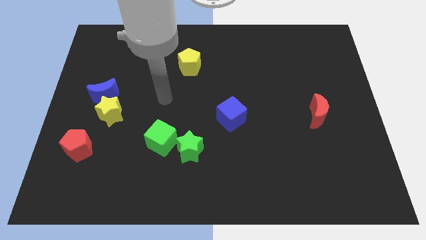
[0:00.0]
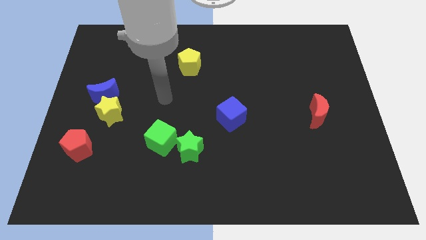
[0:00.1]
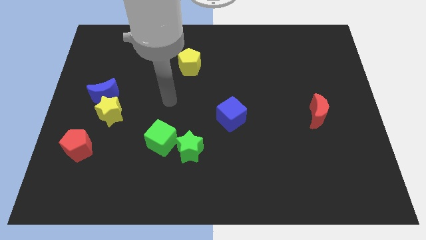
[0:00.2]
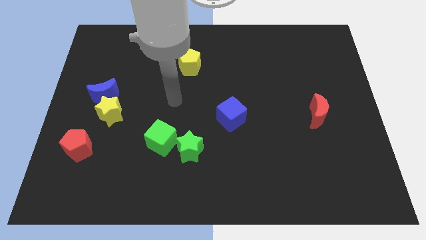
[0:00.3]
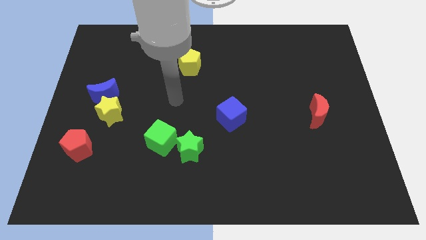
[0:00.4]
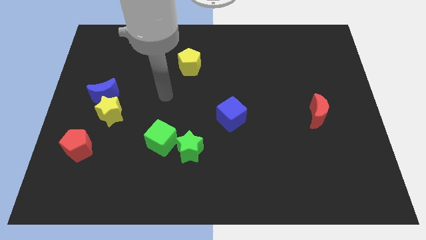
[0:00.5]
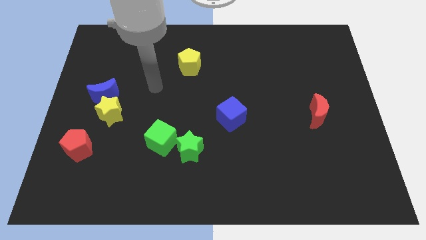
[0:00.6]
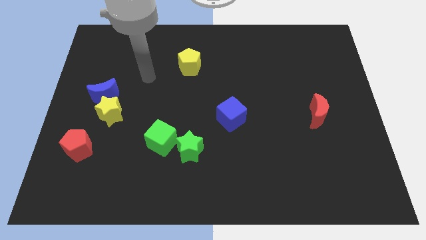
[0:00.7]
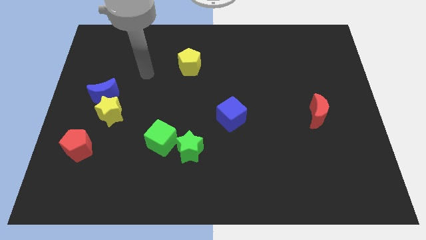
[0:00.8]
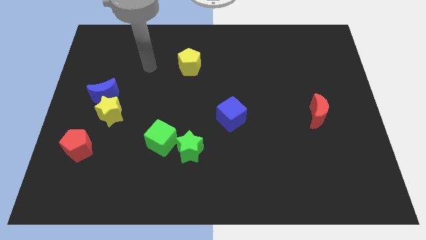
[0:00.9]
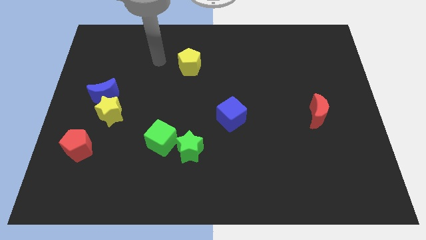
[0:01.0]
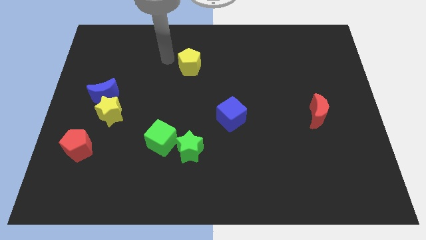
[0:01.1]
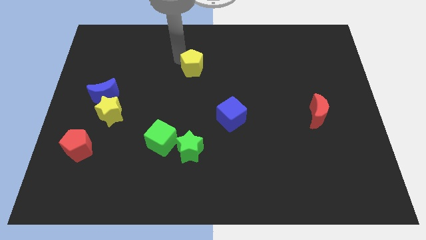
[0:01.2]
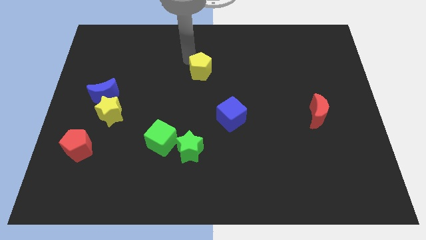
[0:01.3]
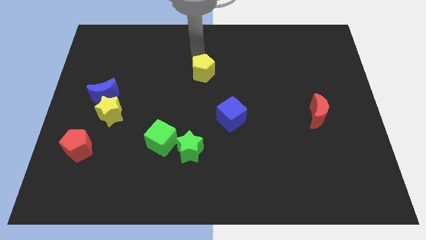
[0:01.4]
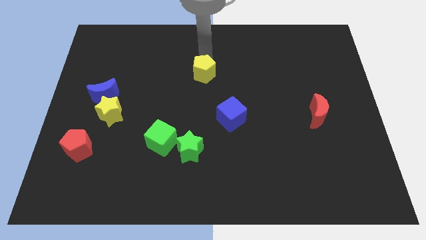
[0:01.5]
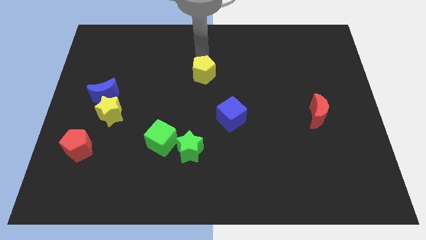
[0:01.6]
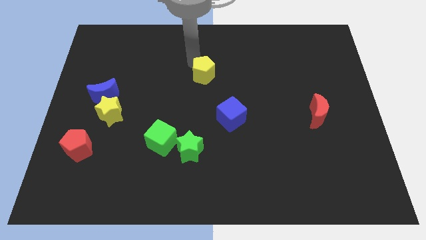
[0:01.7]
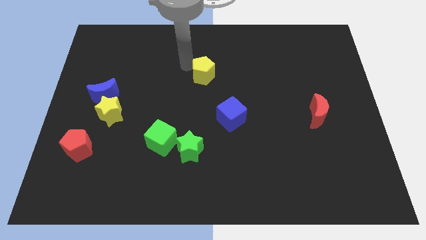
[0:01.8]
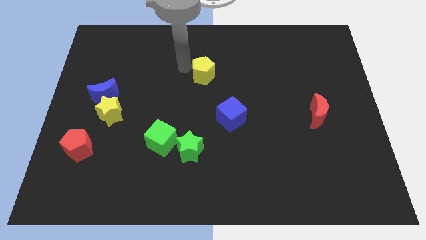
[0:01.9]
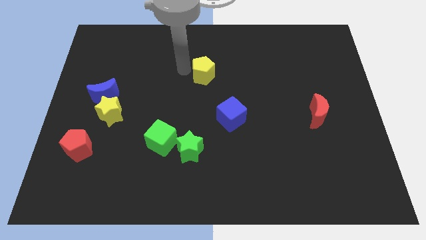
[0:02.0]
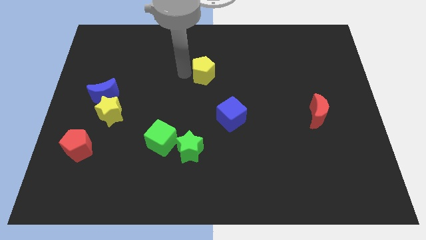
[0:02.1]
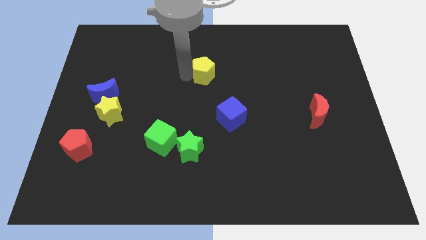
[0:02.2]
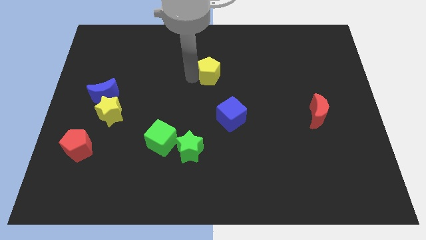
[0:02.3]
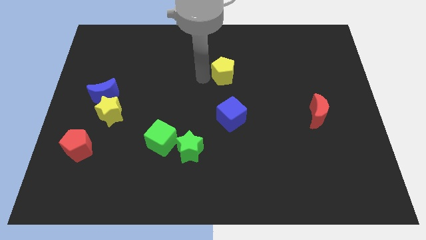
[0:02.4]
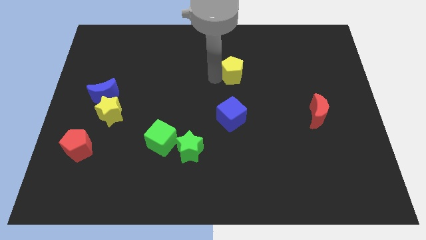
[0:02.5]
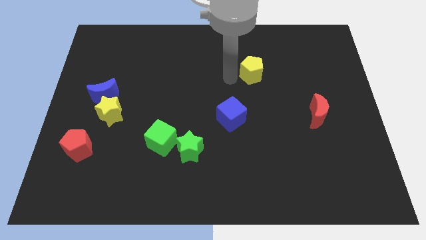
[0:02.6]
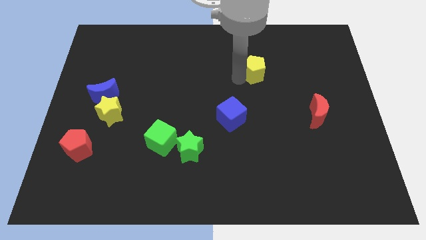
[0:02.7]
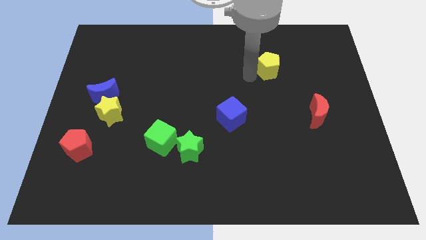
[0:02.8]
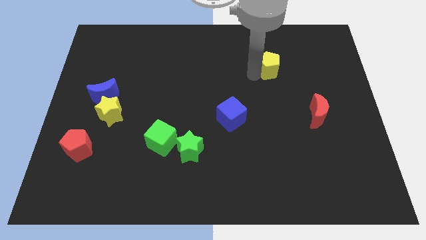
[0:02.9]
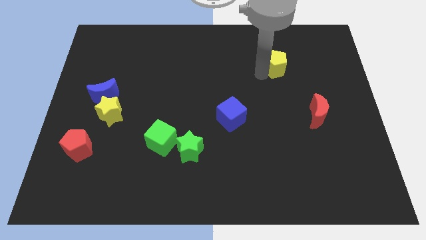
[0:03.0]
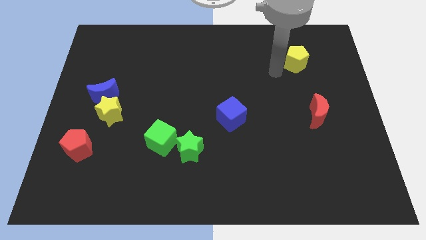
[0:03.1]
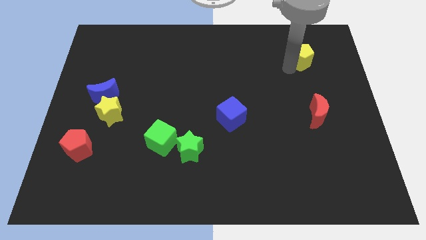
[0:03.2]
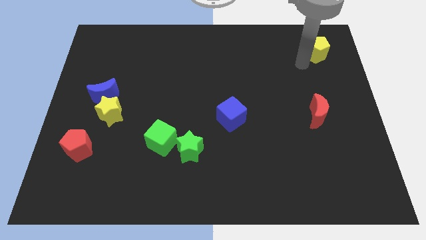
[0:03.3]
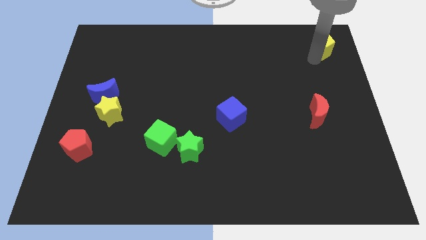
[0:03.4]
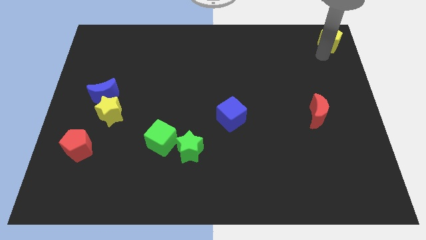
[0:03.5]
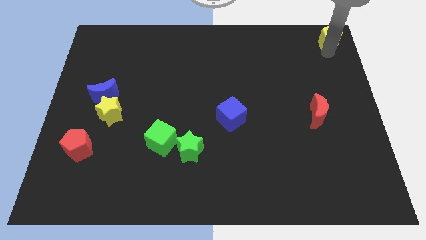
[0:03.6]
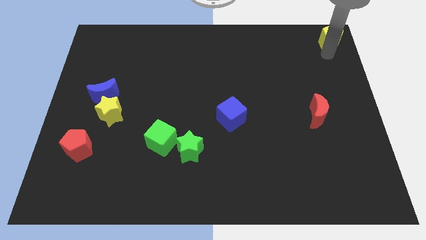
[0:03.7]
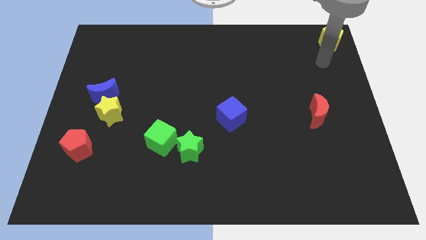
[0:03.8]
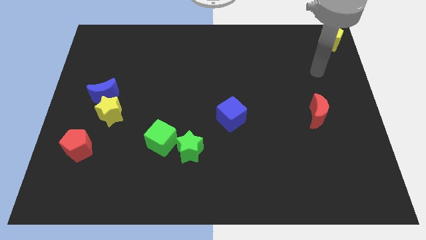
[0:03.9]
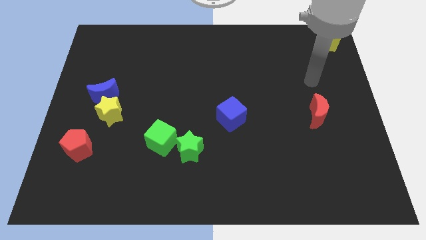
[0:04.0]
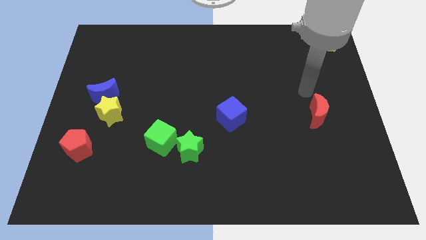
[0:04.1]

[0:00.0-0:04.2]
place the yellow pentagon at the top right corner of the board

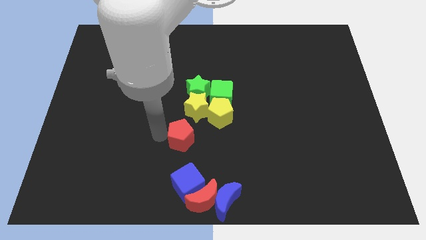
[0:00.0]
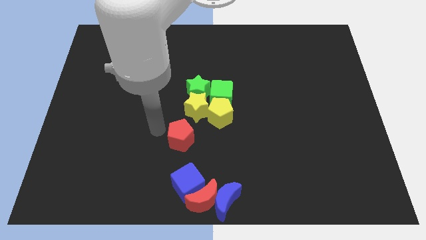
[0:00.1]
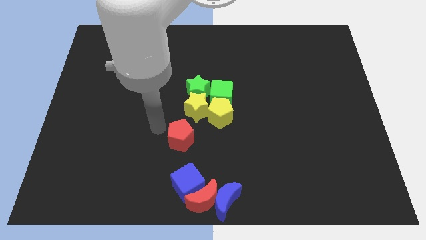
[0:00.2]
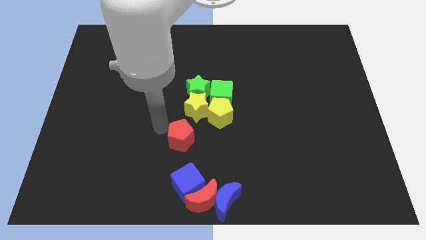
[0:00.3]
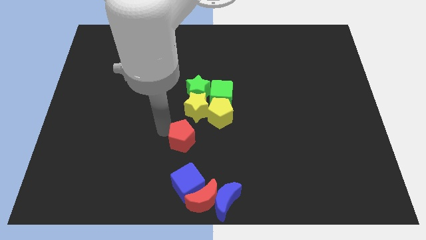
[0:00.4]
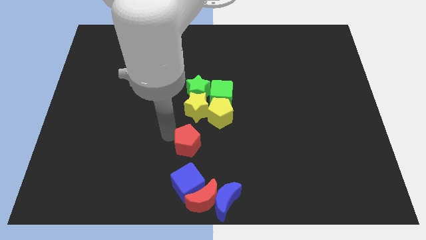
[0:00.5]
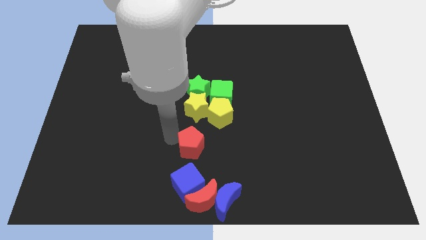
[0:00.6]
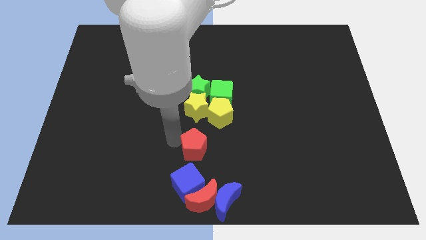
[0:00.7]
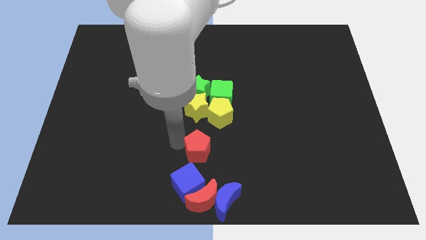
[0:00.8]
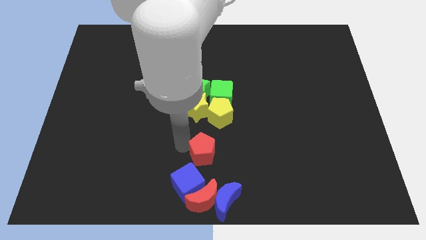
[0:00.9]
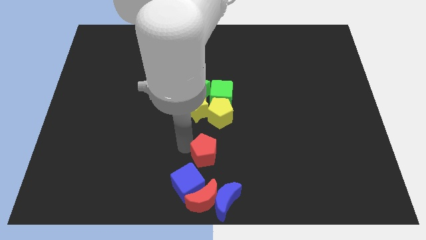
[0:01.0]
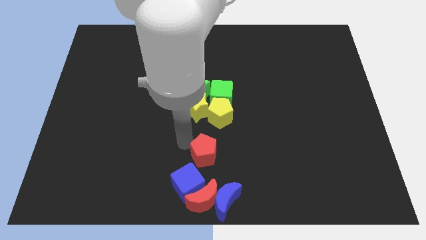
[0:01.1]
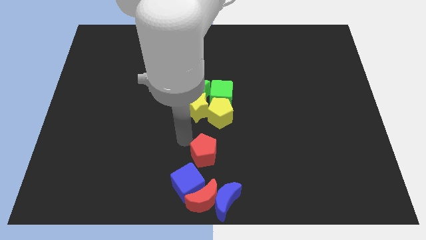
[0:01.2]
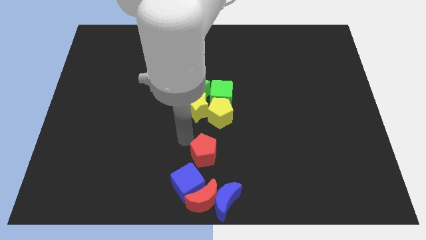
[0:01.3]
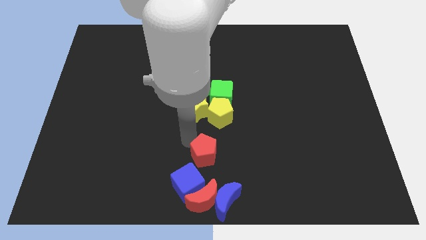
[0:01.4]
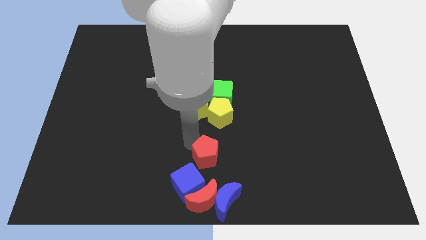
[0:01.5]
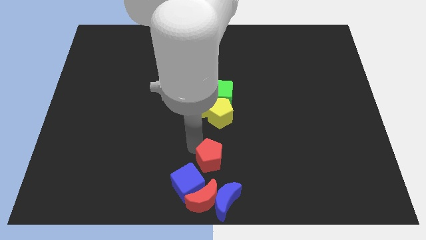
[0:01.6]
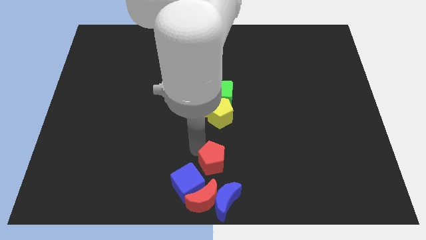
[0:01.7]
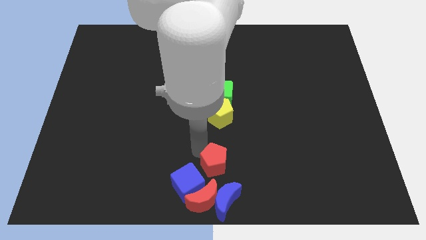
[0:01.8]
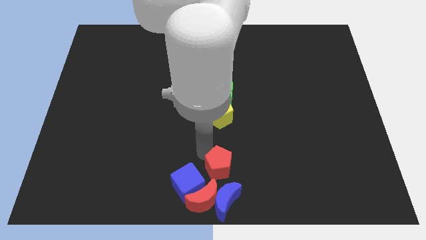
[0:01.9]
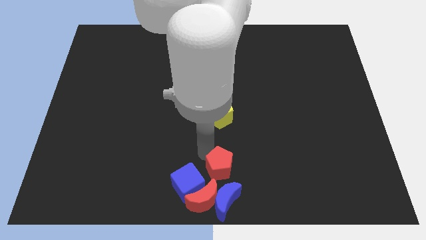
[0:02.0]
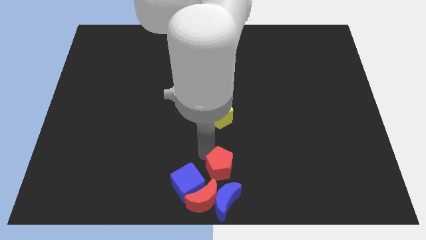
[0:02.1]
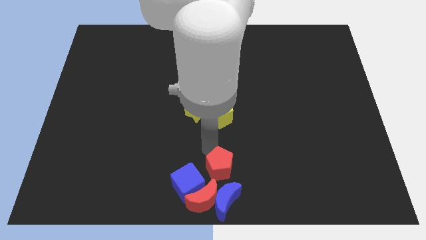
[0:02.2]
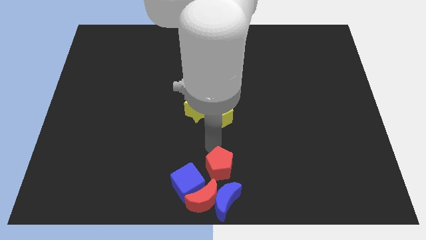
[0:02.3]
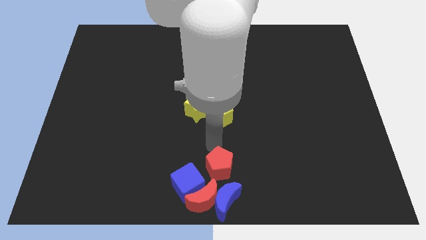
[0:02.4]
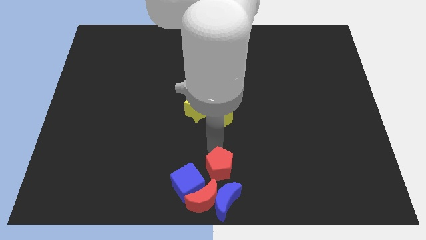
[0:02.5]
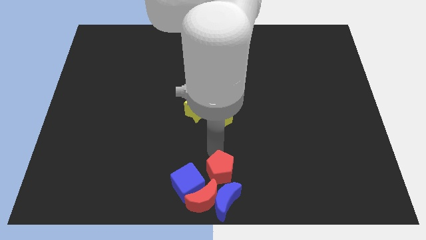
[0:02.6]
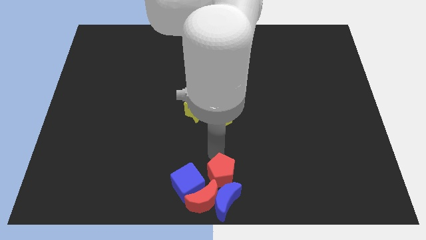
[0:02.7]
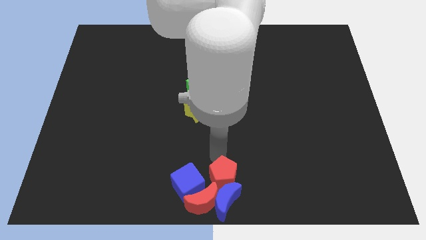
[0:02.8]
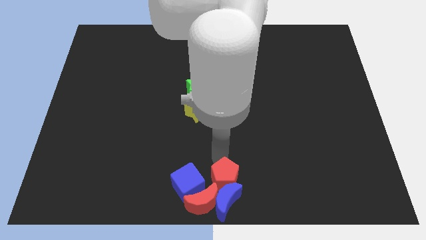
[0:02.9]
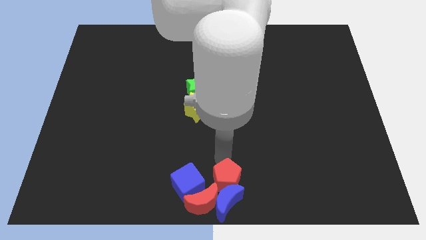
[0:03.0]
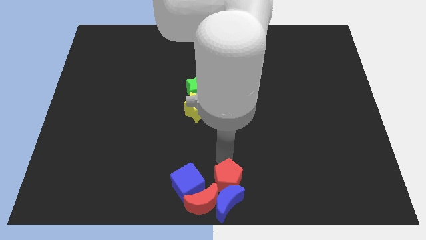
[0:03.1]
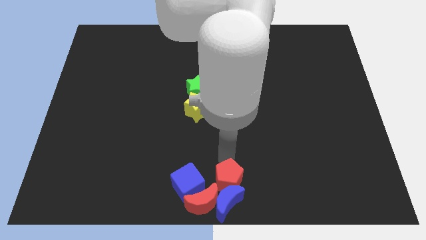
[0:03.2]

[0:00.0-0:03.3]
move the red pentagon to the bottom center

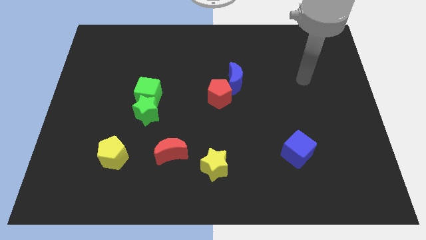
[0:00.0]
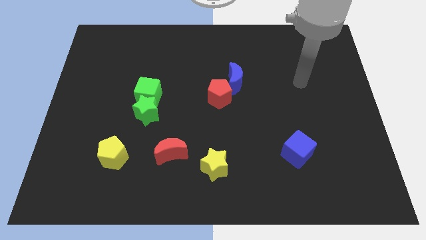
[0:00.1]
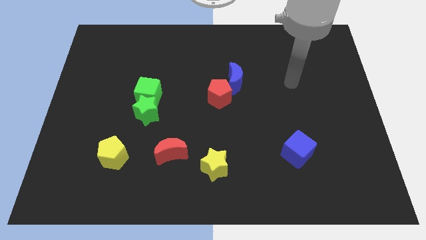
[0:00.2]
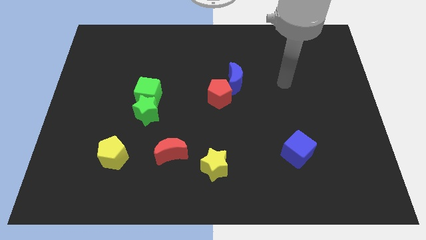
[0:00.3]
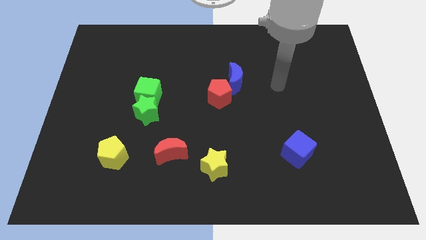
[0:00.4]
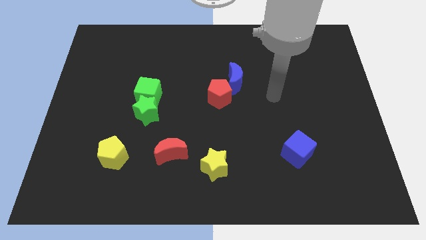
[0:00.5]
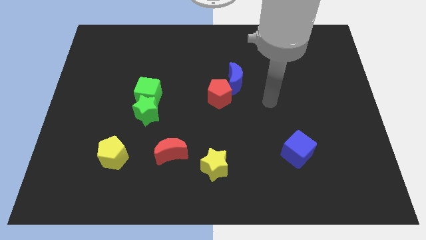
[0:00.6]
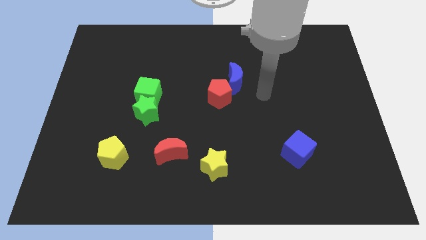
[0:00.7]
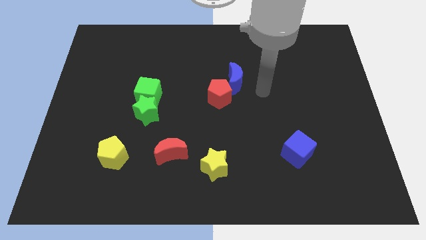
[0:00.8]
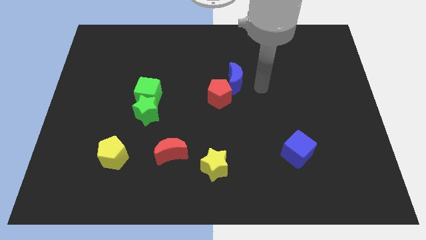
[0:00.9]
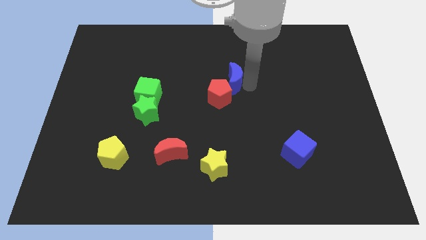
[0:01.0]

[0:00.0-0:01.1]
move your arm towards the blue crescent

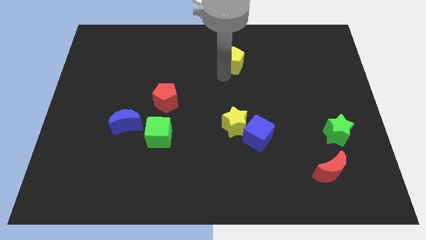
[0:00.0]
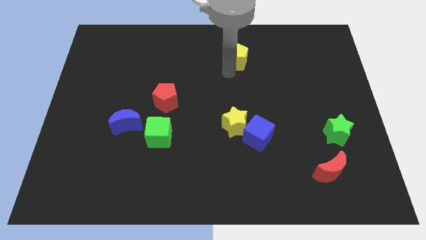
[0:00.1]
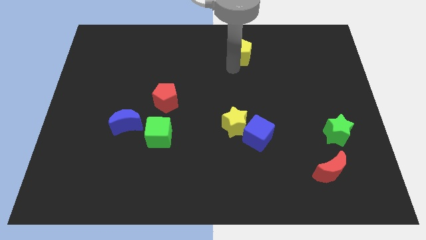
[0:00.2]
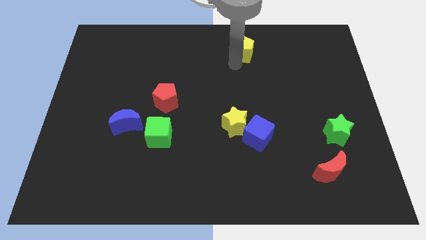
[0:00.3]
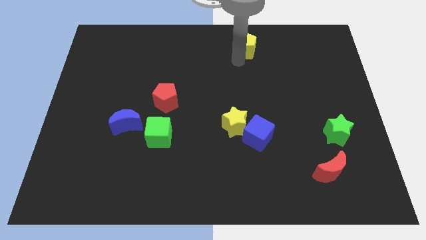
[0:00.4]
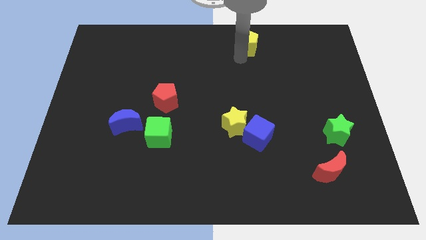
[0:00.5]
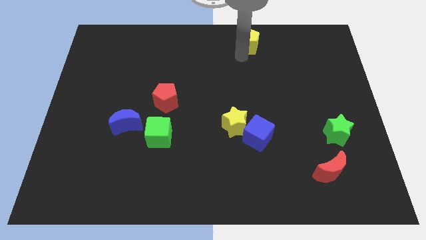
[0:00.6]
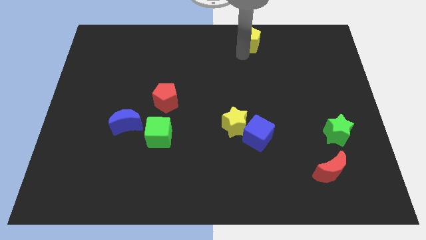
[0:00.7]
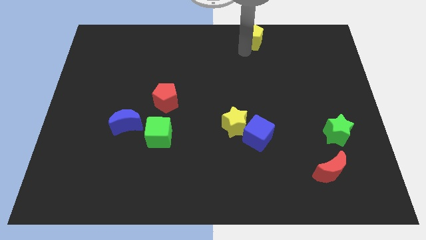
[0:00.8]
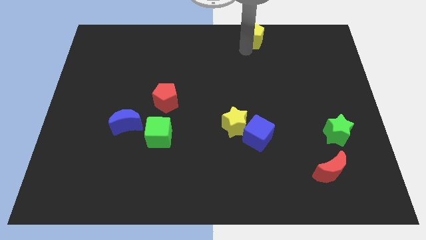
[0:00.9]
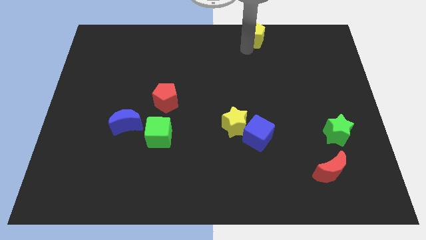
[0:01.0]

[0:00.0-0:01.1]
slide yellow pentagon towards up
